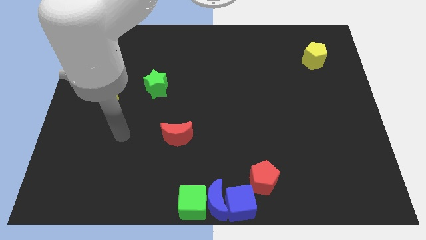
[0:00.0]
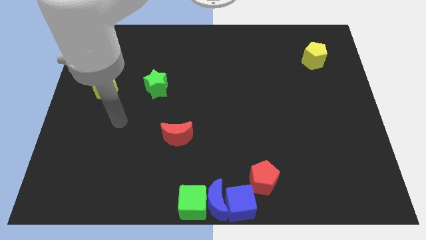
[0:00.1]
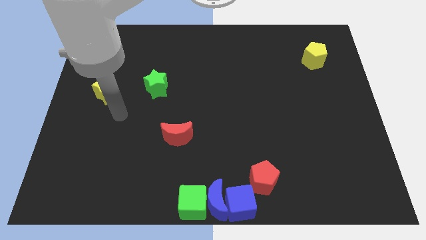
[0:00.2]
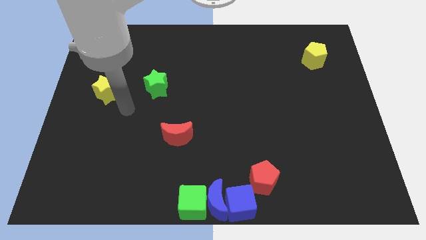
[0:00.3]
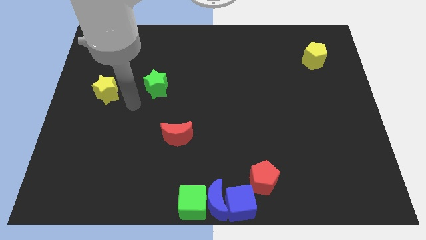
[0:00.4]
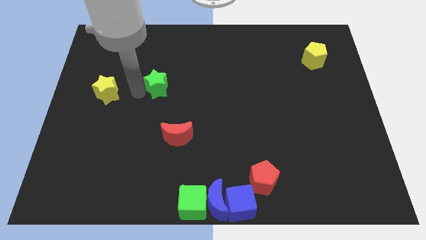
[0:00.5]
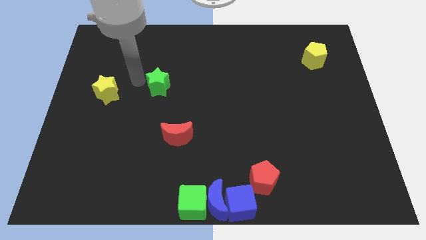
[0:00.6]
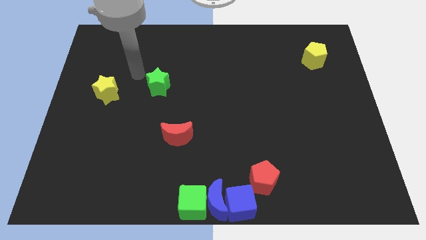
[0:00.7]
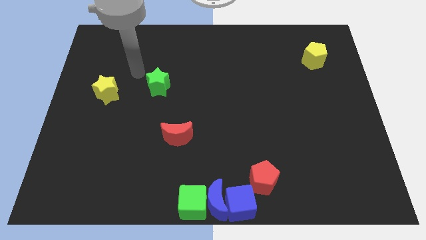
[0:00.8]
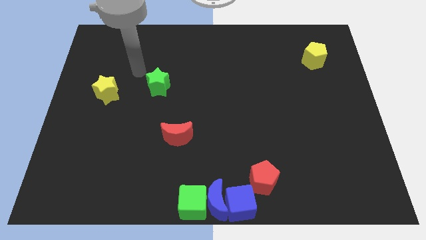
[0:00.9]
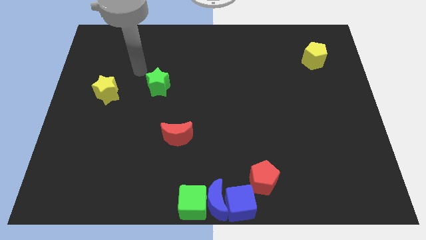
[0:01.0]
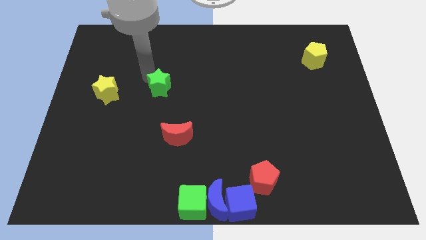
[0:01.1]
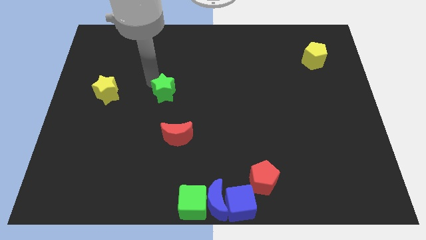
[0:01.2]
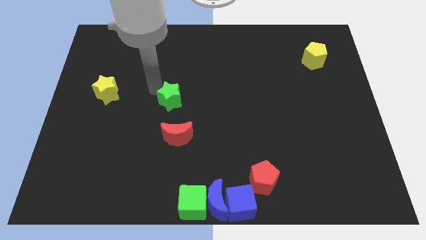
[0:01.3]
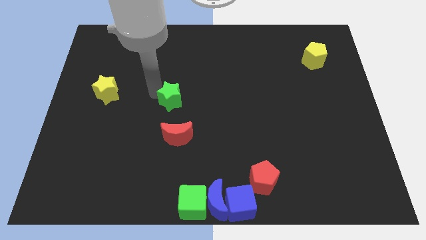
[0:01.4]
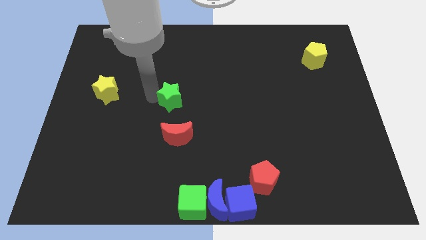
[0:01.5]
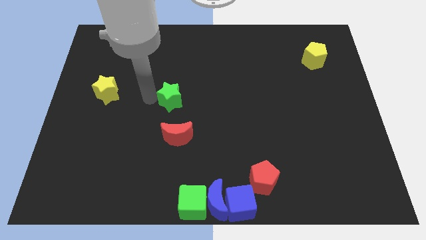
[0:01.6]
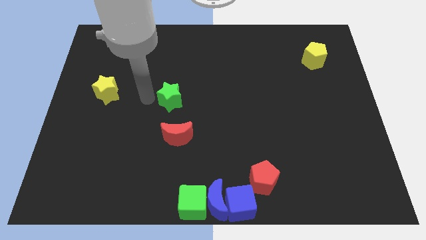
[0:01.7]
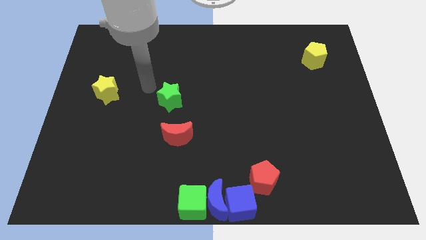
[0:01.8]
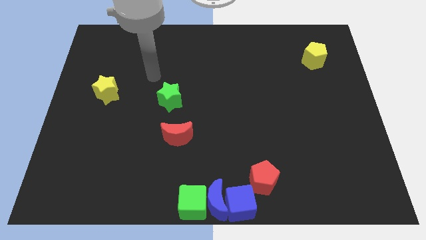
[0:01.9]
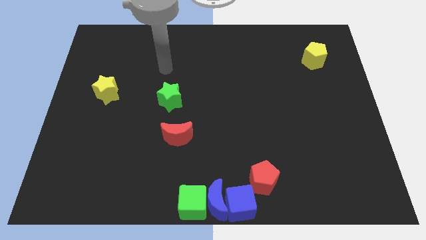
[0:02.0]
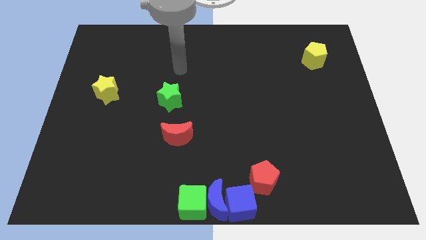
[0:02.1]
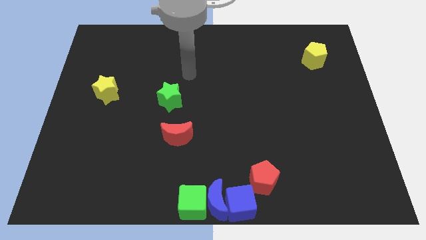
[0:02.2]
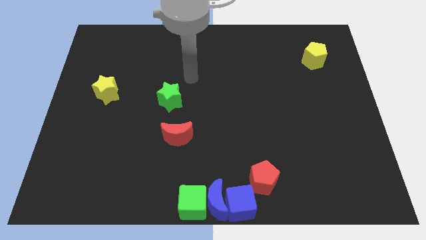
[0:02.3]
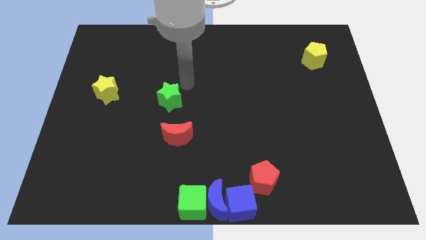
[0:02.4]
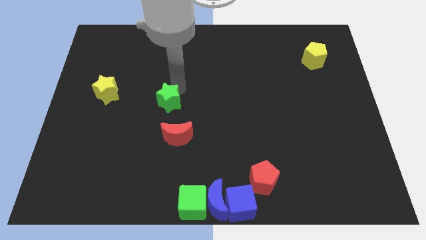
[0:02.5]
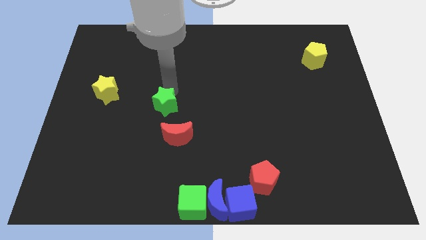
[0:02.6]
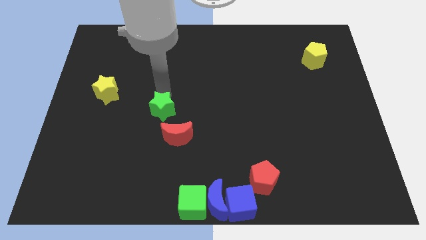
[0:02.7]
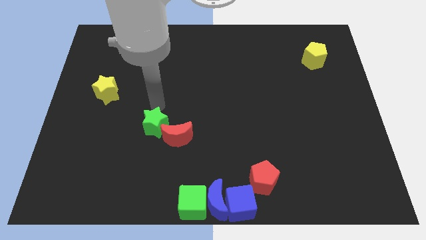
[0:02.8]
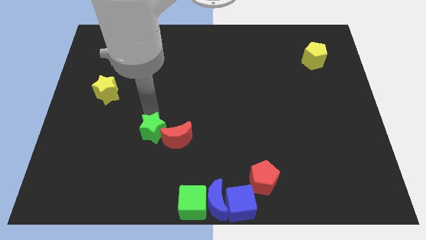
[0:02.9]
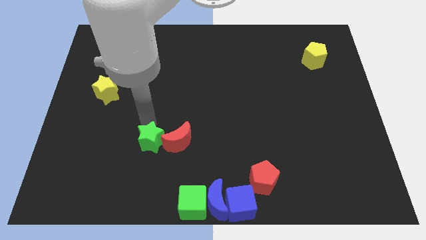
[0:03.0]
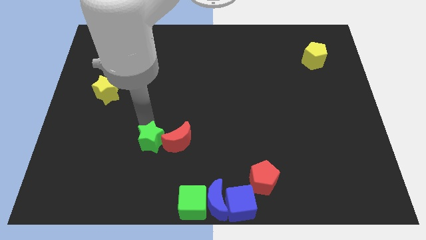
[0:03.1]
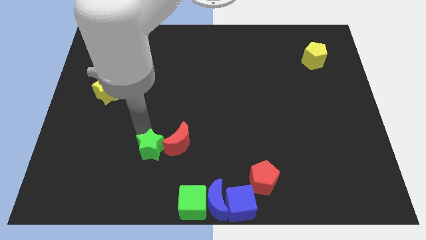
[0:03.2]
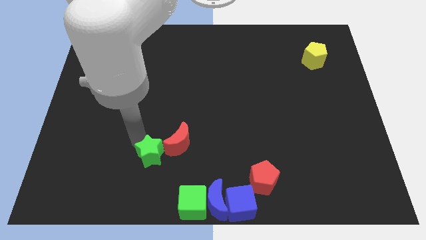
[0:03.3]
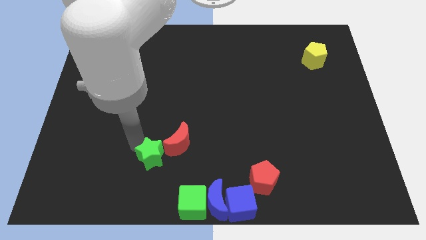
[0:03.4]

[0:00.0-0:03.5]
push the green star into the red crescent

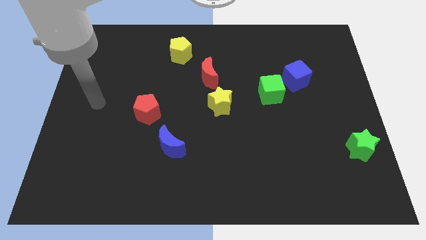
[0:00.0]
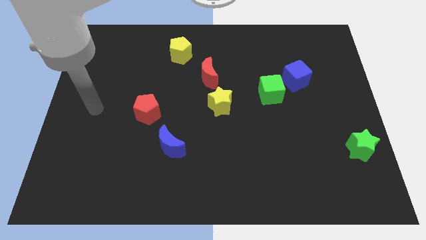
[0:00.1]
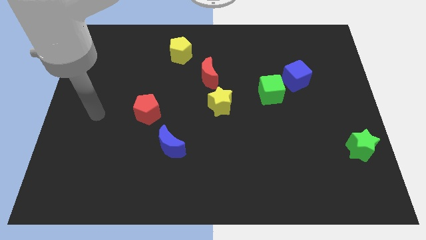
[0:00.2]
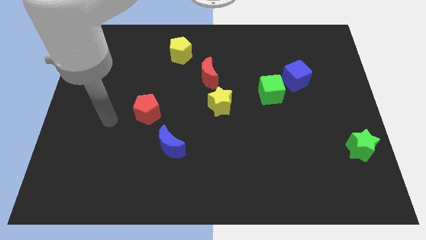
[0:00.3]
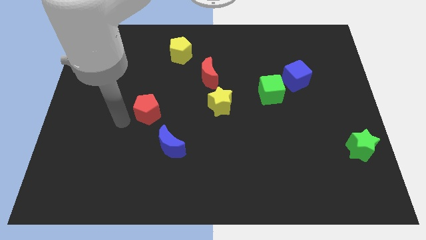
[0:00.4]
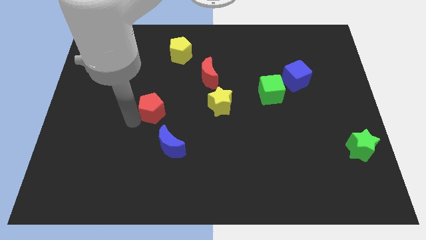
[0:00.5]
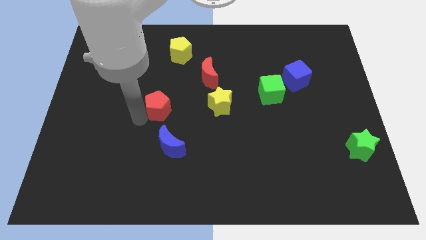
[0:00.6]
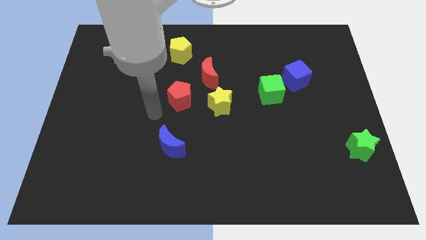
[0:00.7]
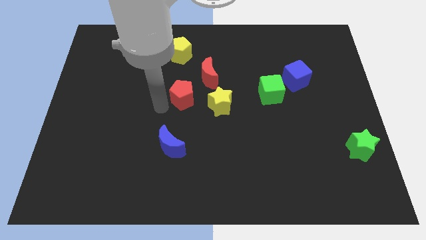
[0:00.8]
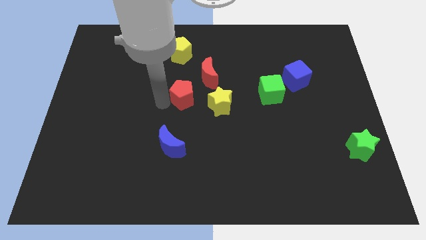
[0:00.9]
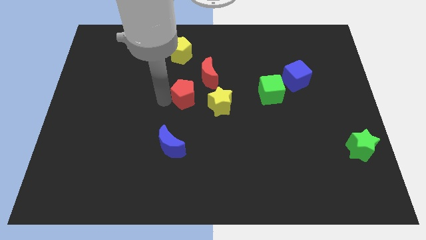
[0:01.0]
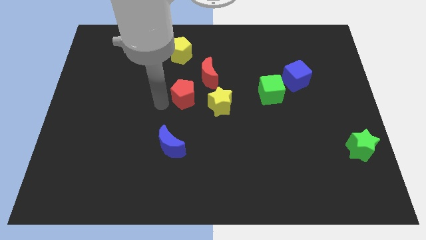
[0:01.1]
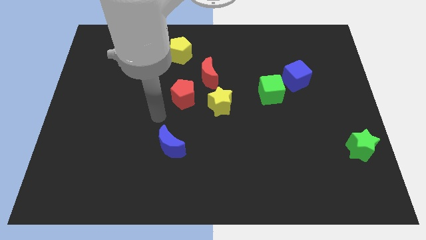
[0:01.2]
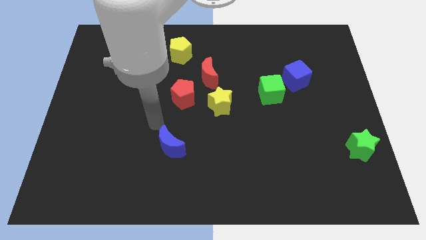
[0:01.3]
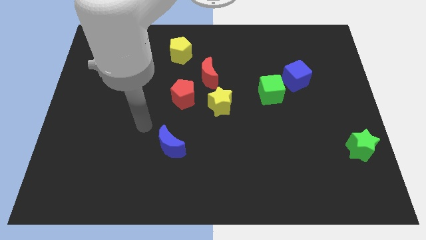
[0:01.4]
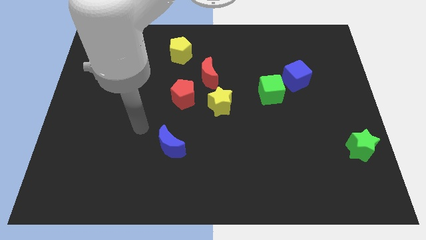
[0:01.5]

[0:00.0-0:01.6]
move the red pentagon towards the red moon

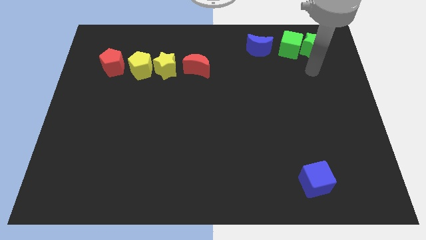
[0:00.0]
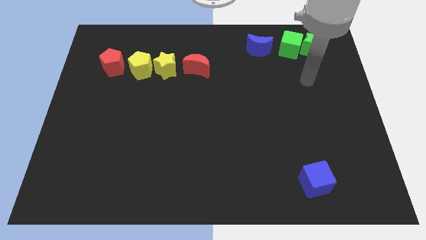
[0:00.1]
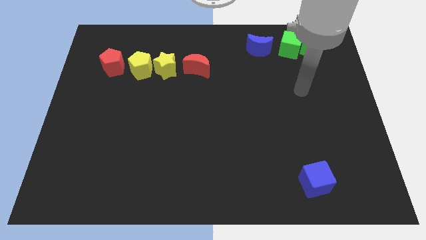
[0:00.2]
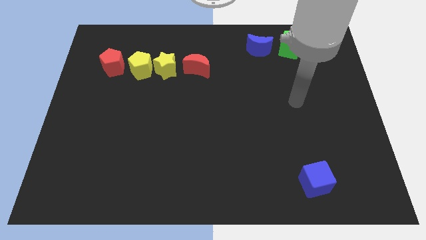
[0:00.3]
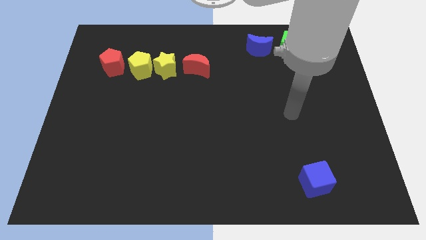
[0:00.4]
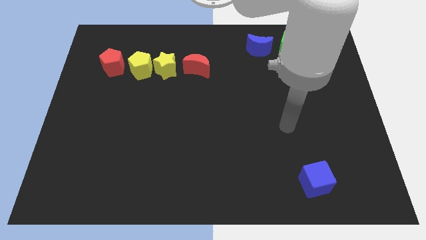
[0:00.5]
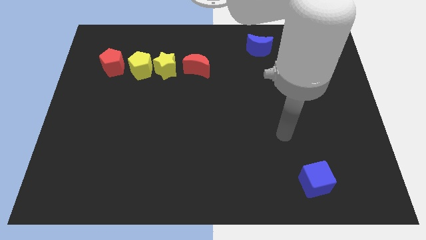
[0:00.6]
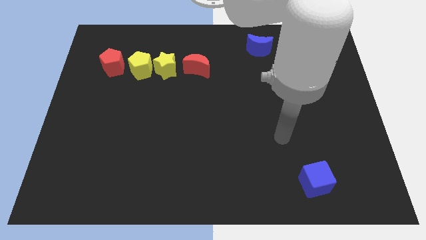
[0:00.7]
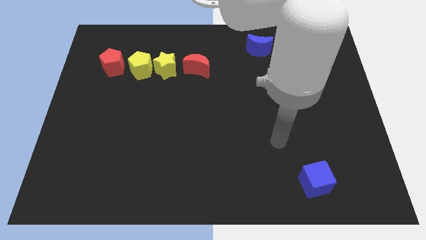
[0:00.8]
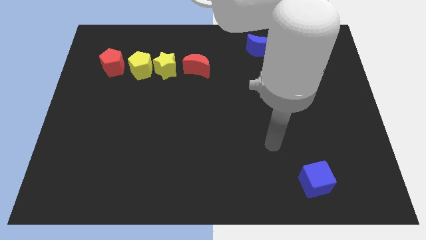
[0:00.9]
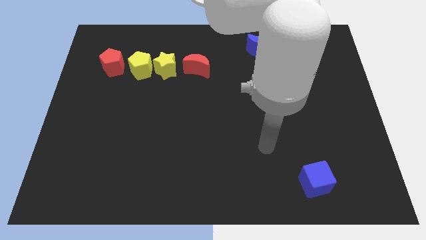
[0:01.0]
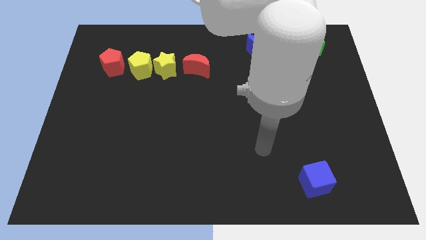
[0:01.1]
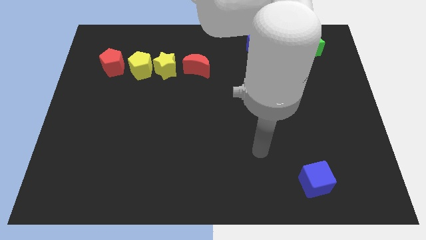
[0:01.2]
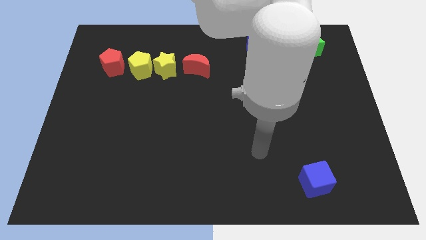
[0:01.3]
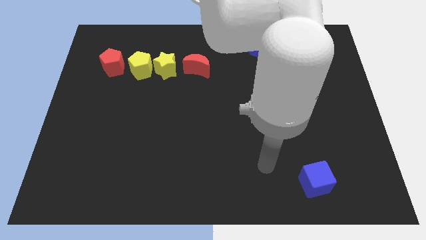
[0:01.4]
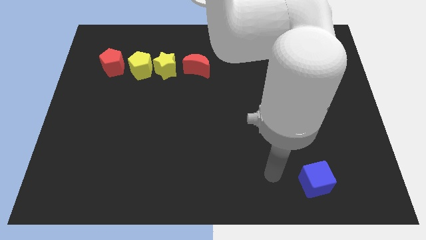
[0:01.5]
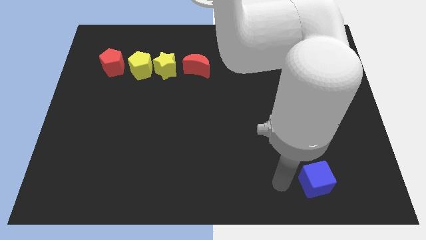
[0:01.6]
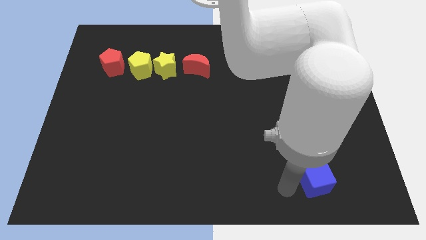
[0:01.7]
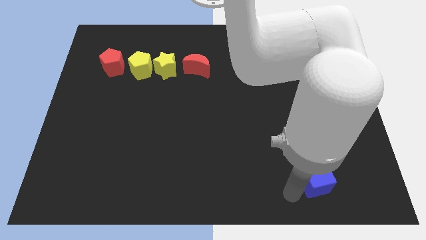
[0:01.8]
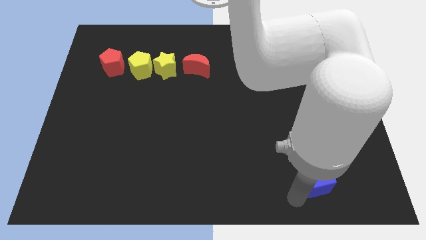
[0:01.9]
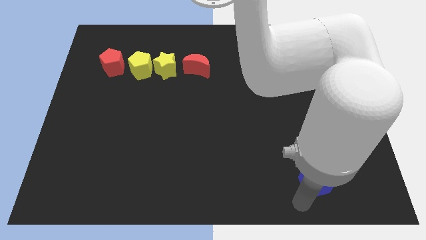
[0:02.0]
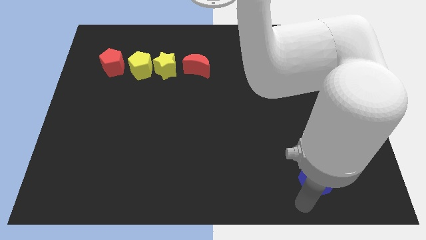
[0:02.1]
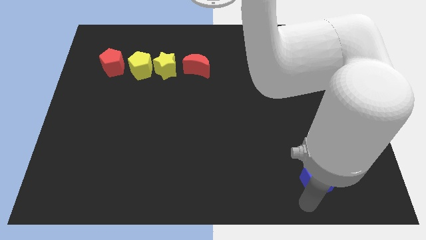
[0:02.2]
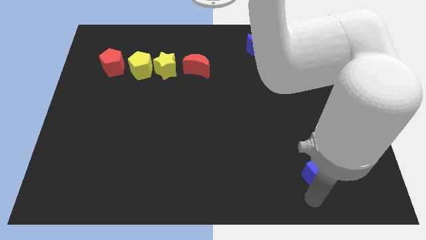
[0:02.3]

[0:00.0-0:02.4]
tap the blue square

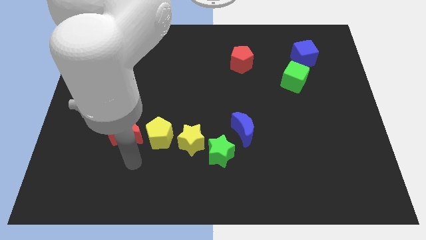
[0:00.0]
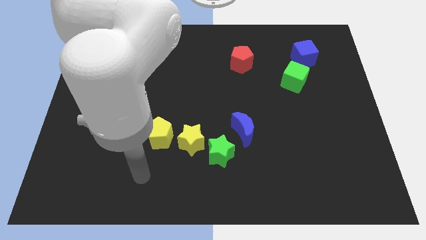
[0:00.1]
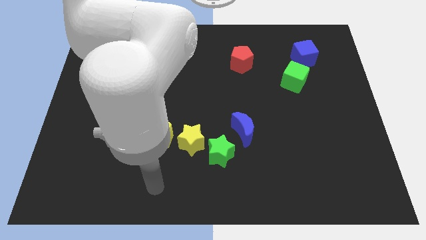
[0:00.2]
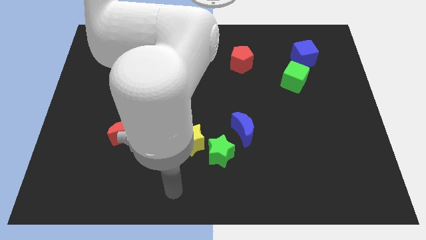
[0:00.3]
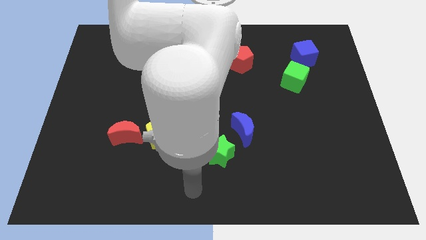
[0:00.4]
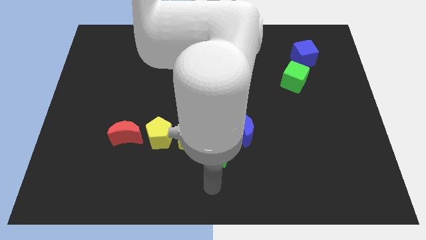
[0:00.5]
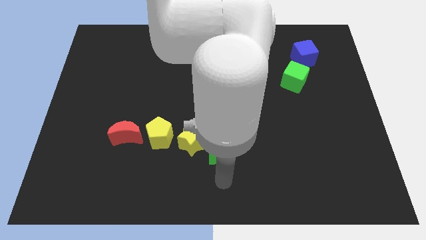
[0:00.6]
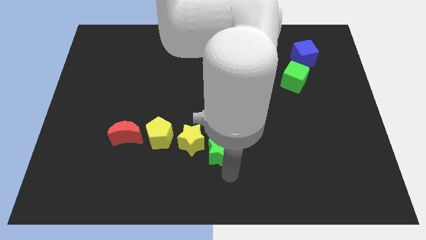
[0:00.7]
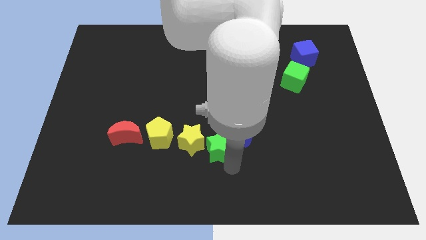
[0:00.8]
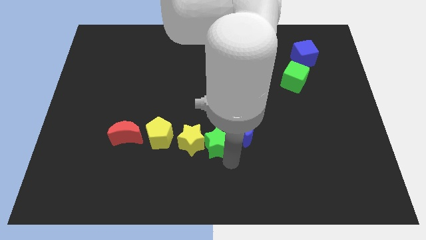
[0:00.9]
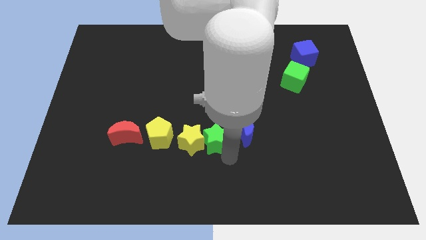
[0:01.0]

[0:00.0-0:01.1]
move the green star to the right of the yellow star

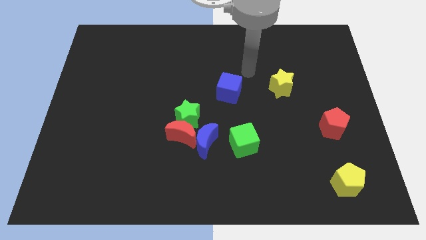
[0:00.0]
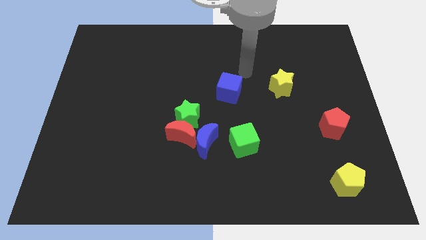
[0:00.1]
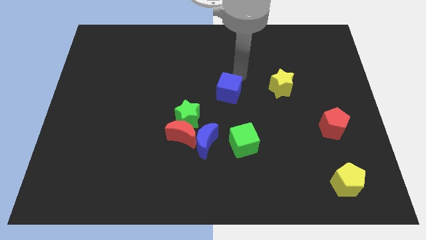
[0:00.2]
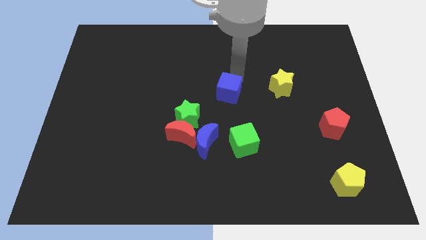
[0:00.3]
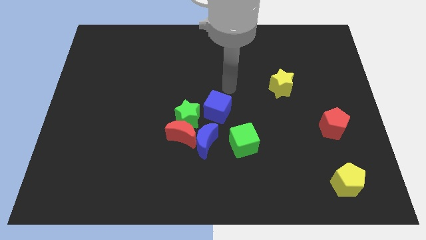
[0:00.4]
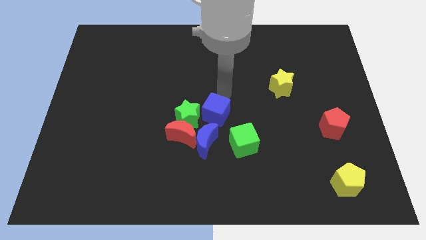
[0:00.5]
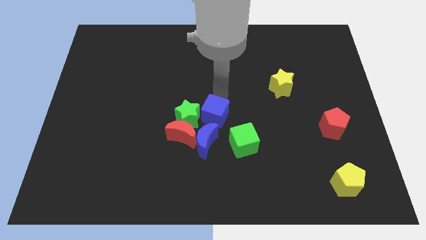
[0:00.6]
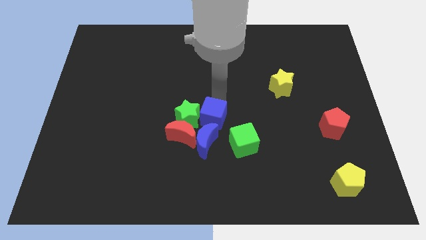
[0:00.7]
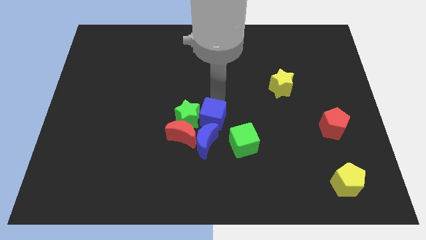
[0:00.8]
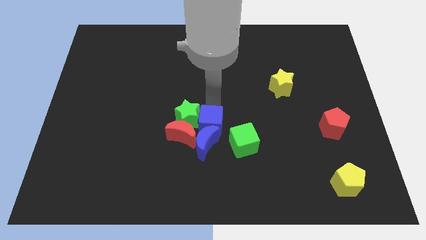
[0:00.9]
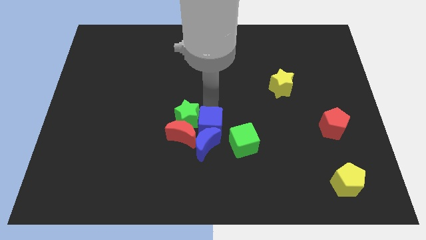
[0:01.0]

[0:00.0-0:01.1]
move the blue cube above the blue crescent
